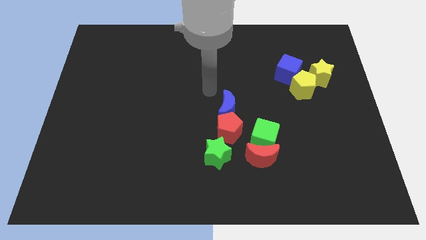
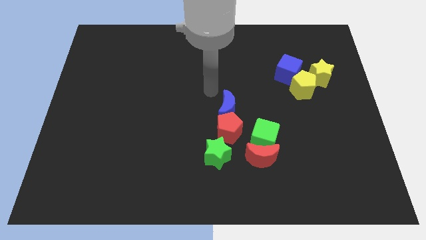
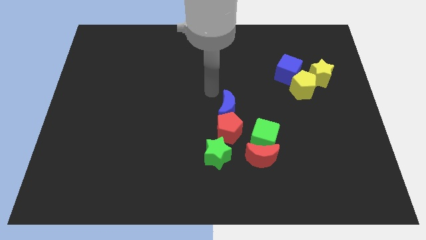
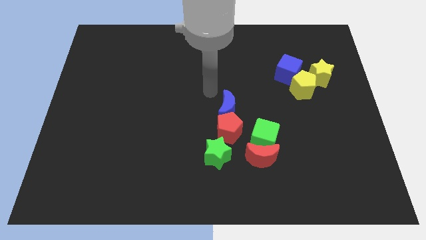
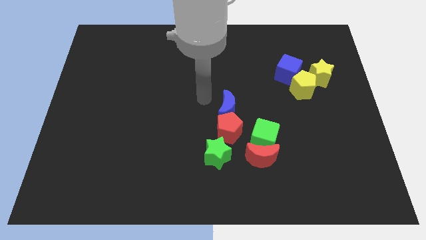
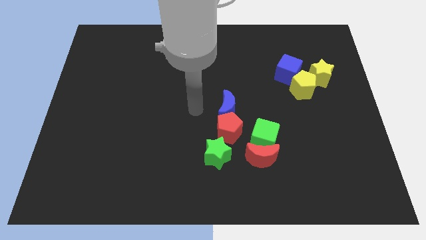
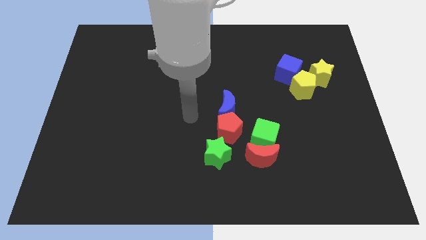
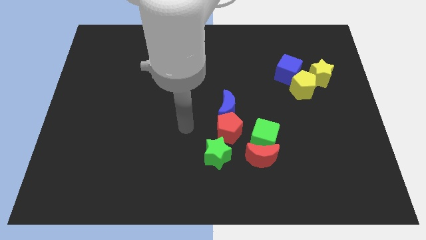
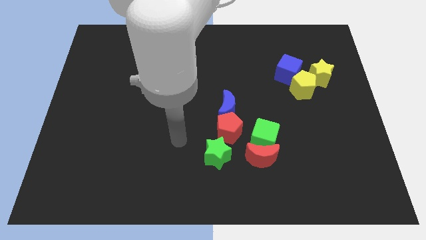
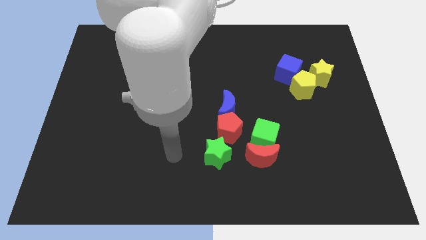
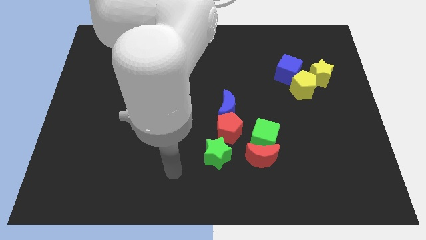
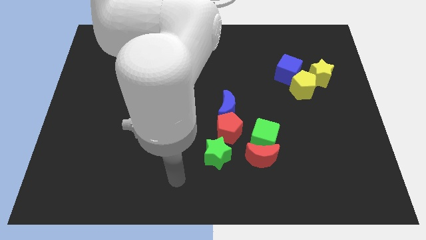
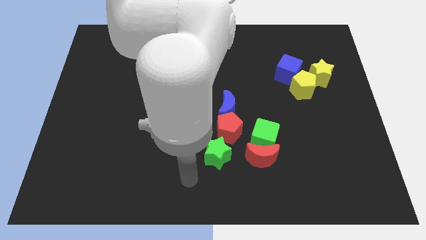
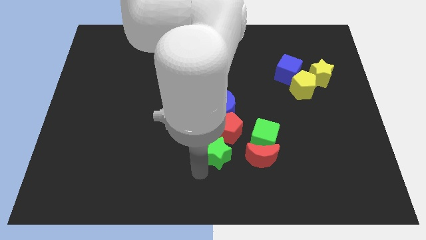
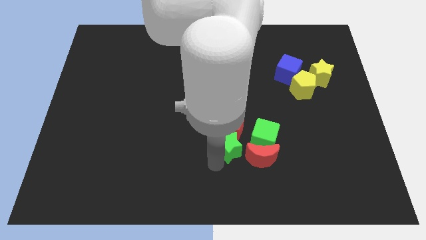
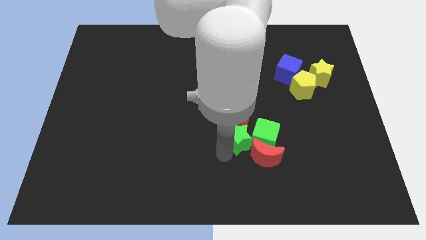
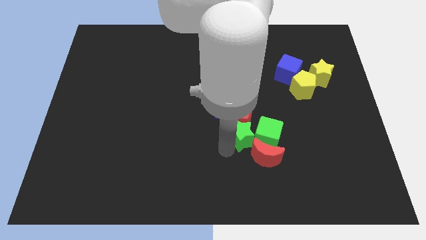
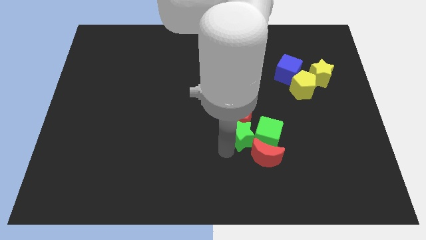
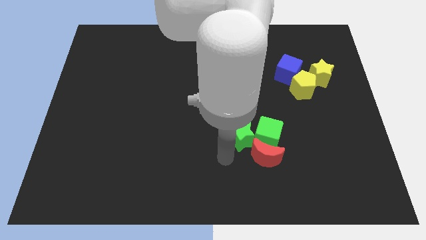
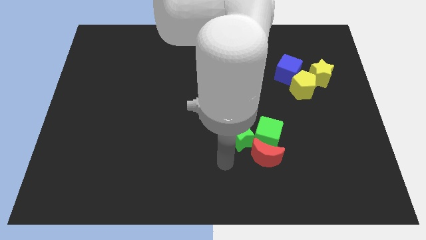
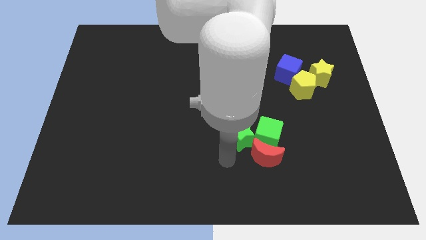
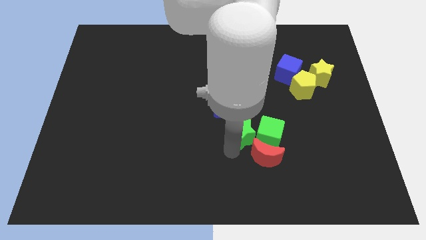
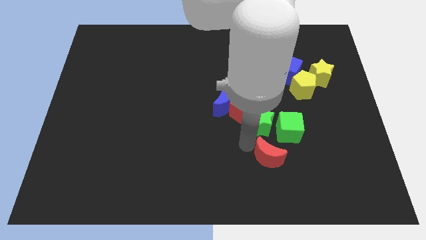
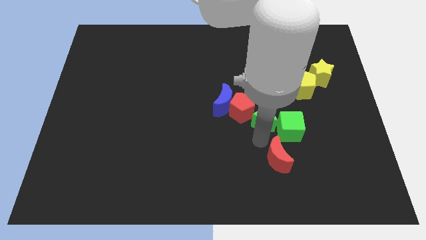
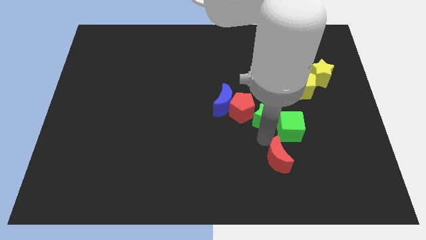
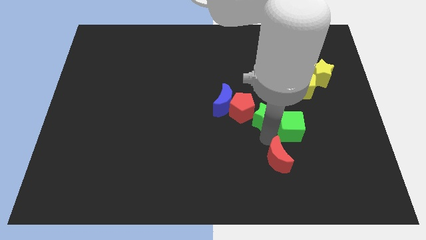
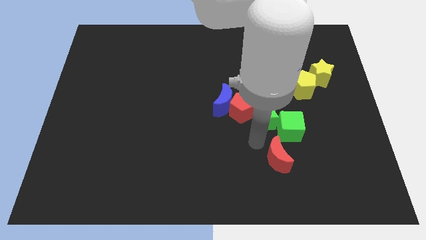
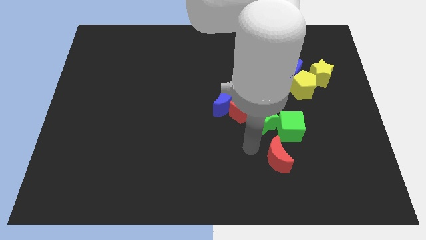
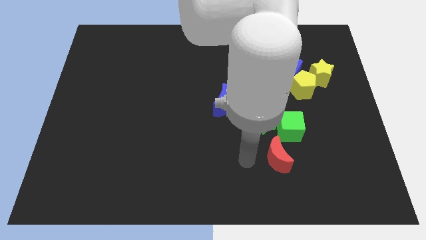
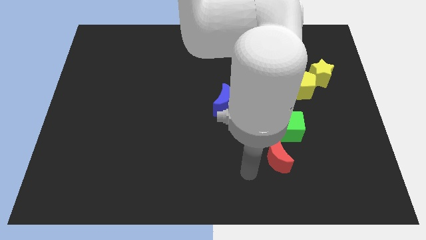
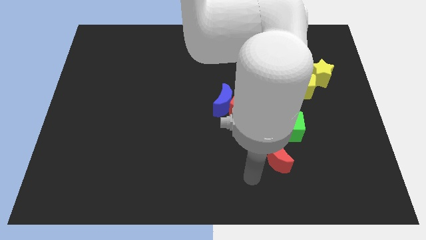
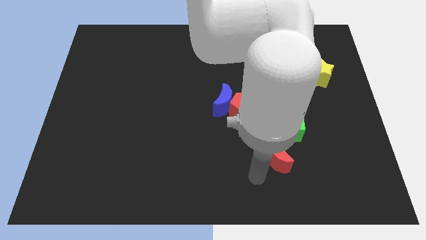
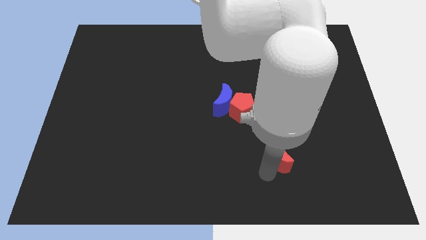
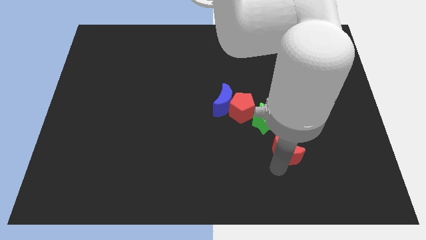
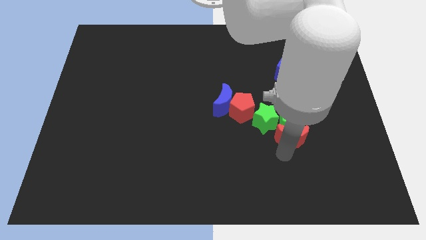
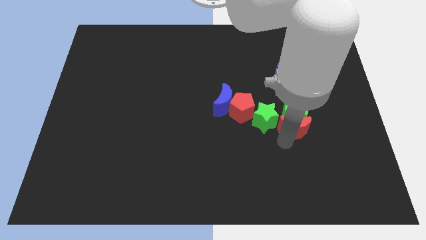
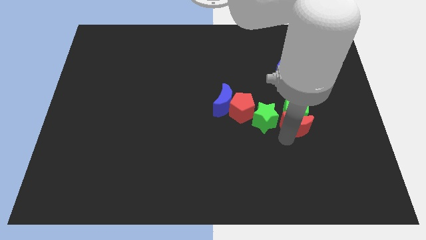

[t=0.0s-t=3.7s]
place the red crescent below the green cube

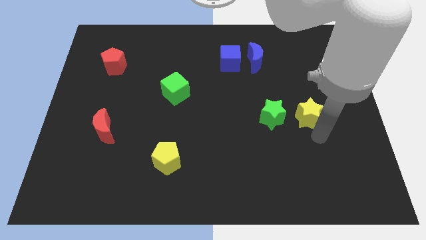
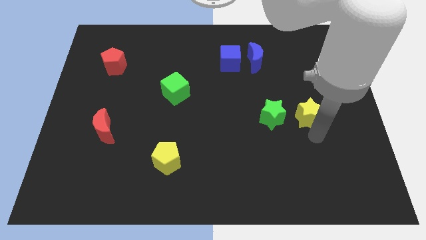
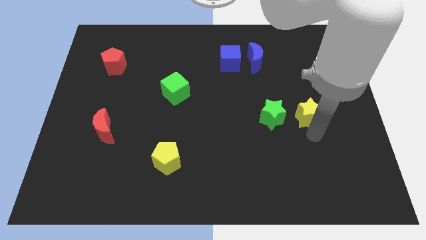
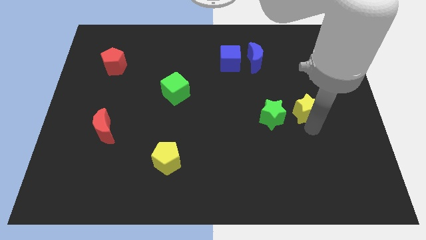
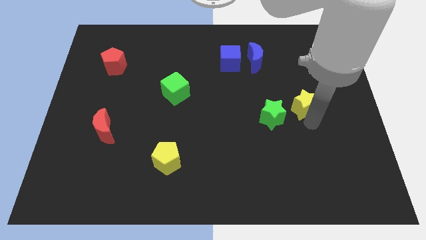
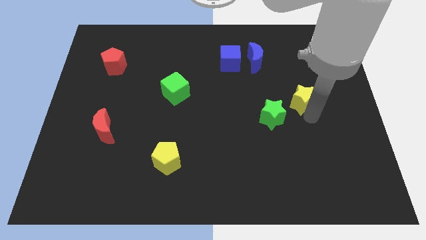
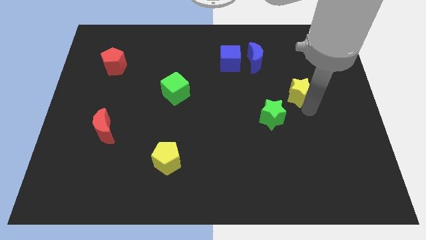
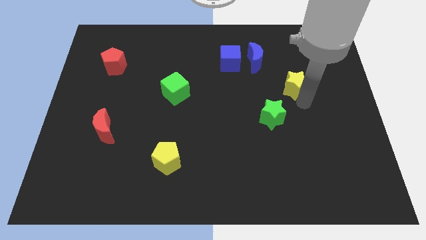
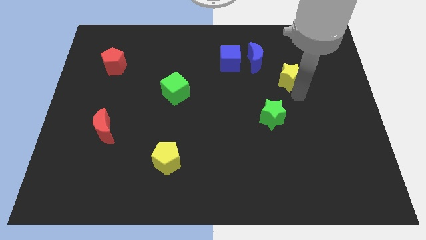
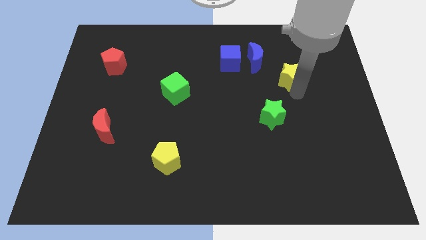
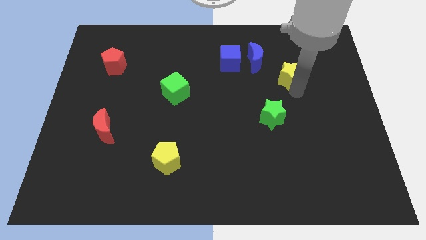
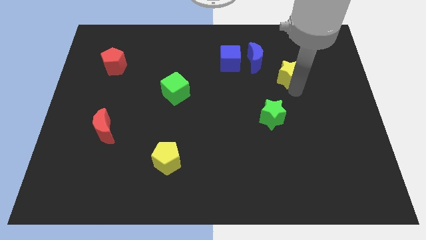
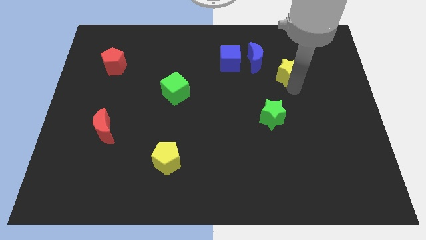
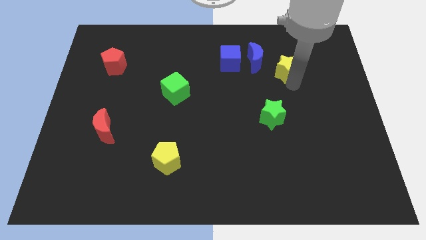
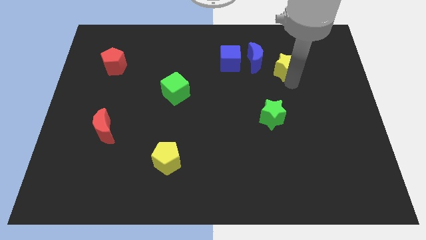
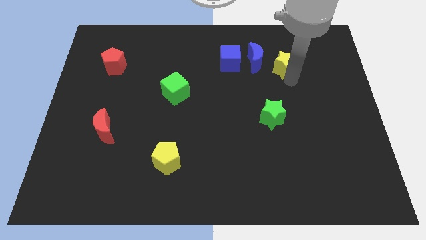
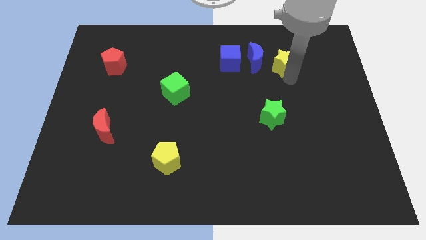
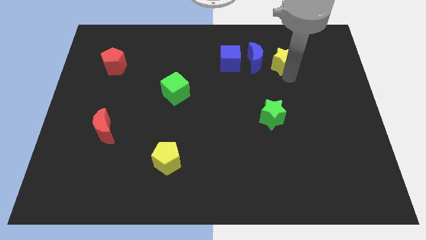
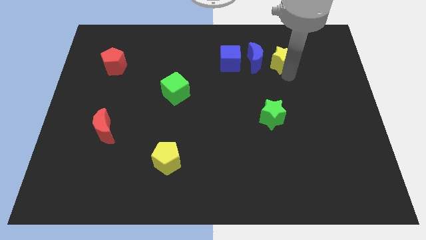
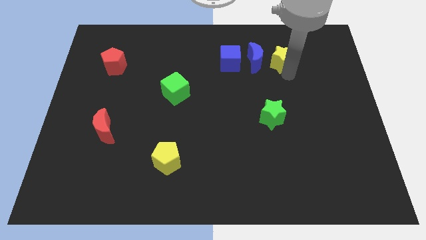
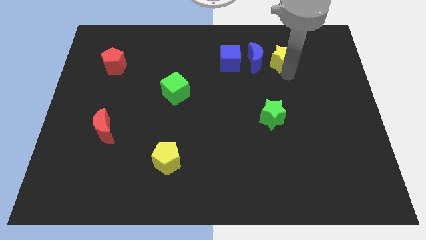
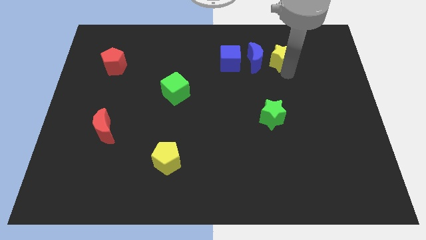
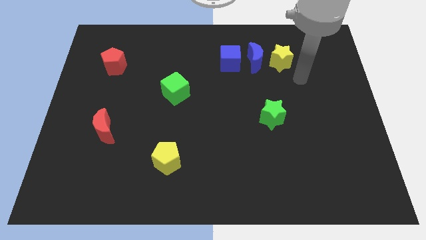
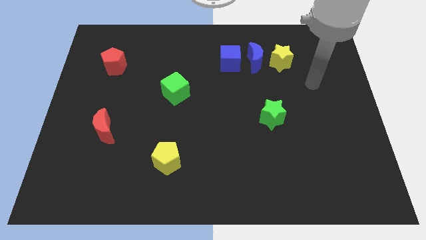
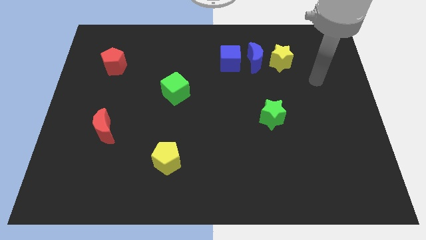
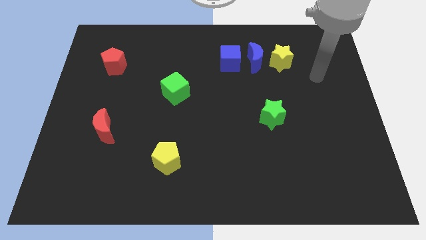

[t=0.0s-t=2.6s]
move the yellow star to the right of the blue moon

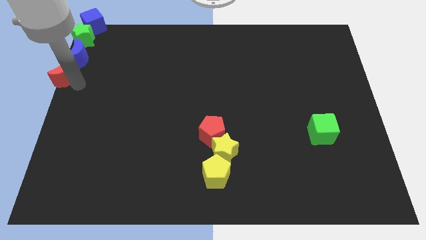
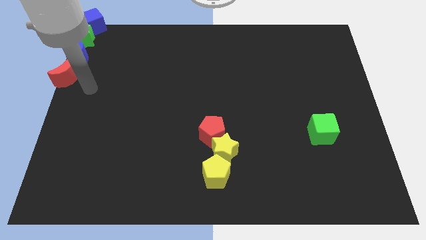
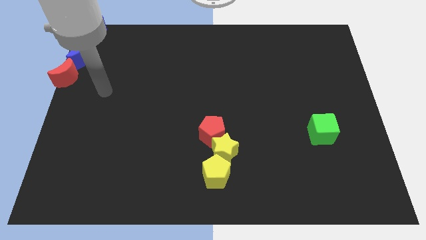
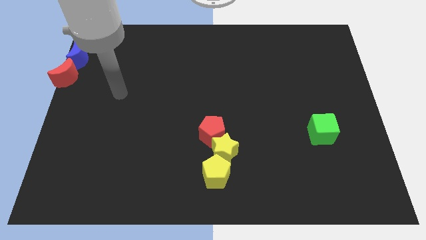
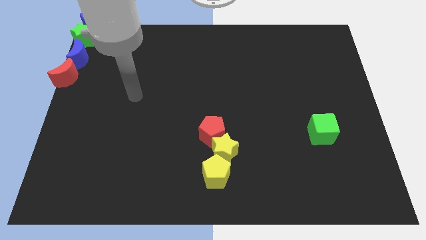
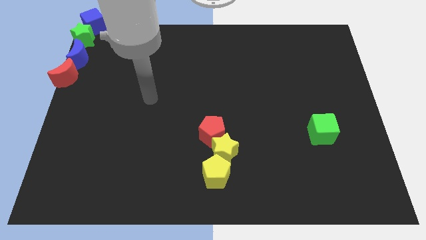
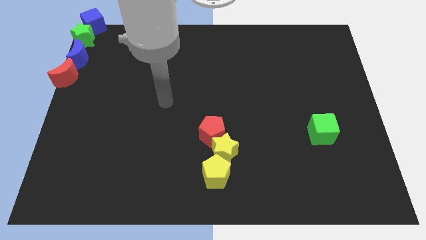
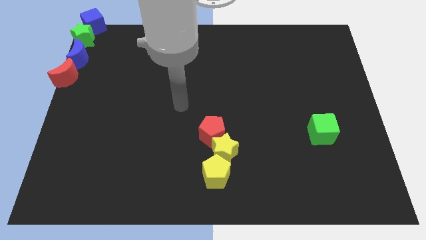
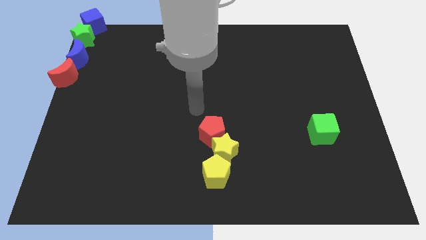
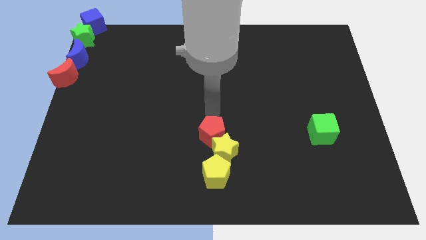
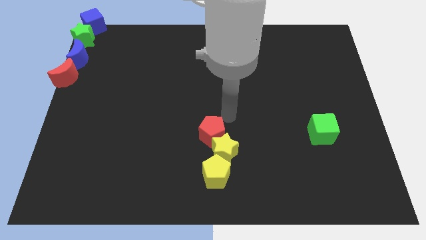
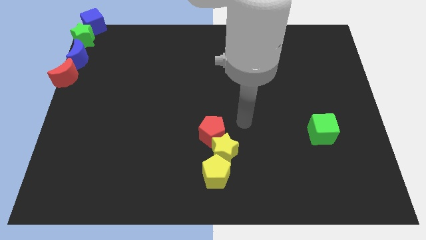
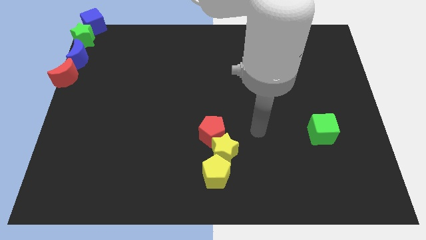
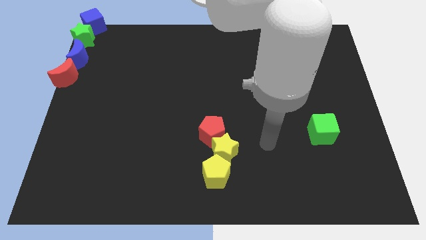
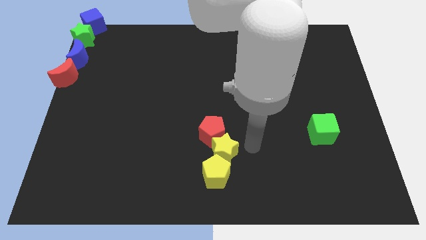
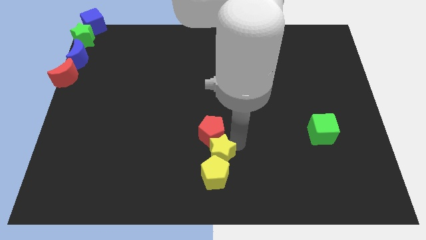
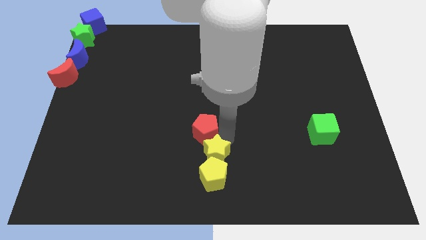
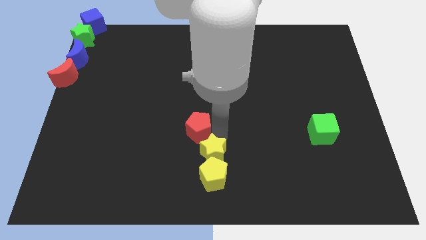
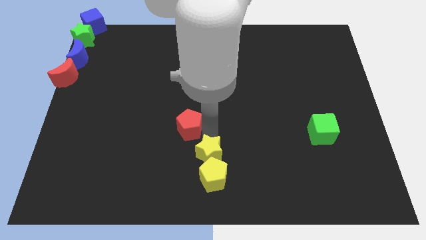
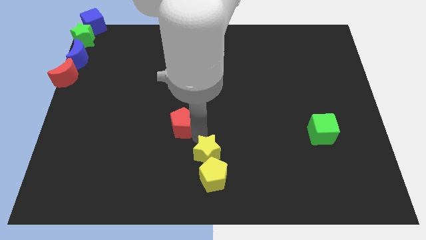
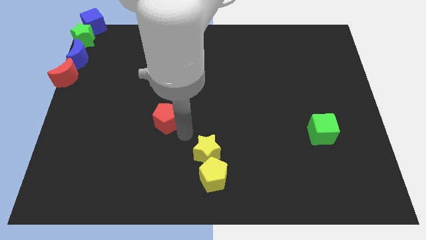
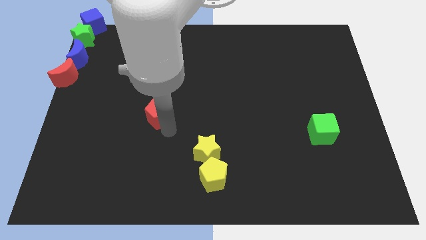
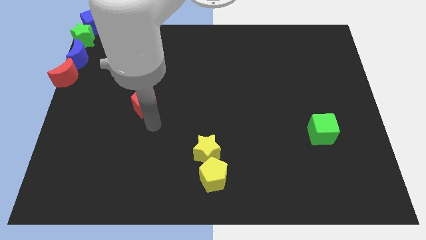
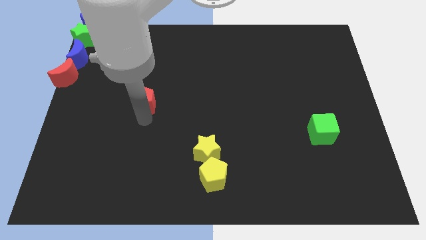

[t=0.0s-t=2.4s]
separate the red pentagon from yellow star

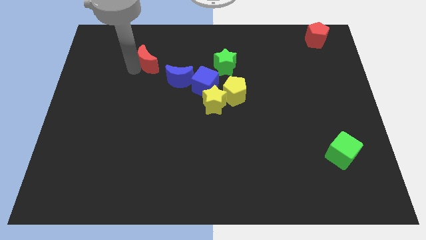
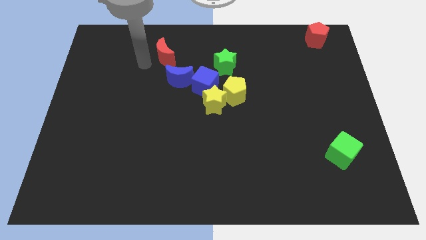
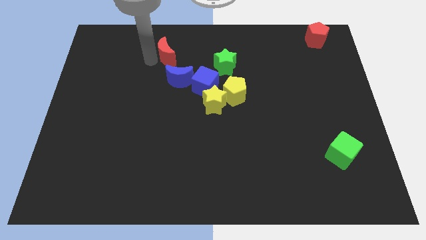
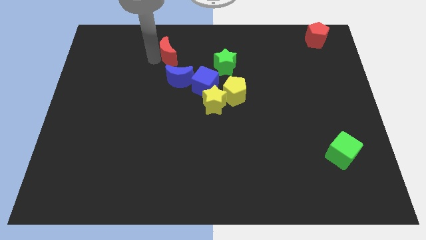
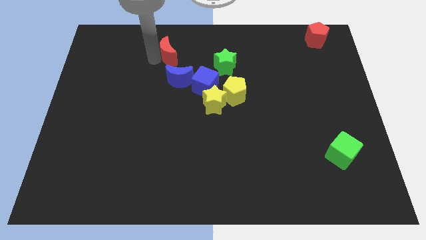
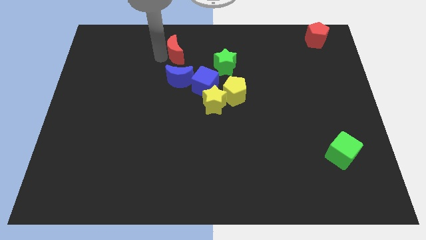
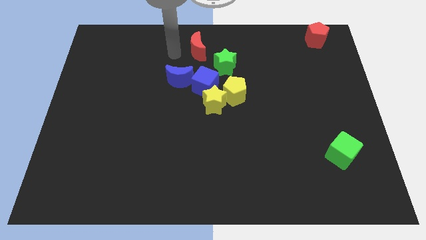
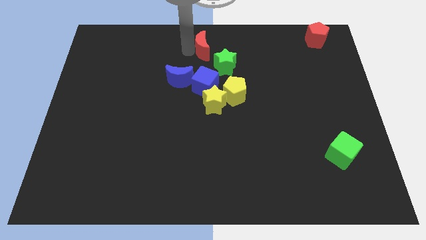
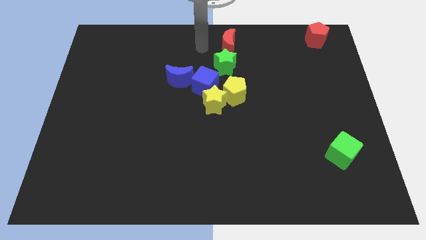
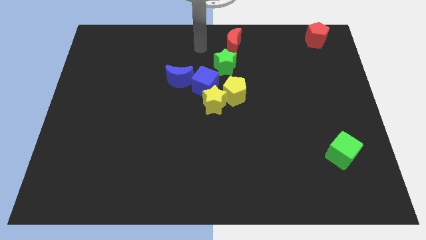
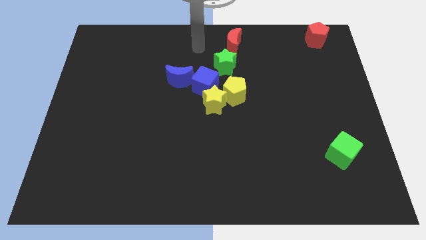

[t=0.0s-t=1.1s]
move the red moon above the green star
